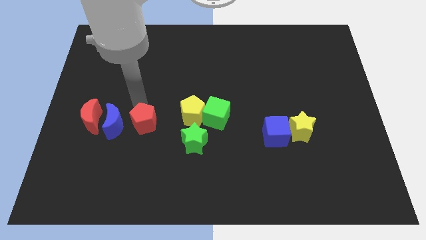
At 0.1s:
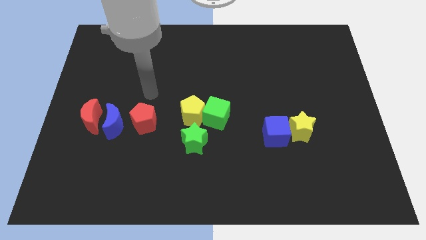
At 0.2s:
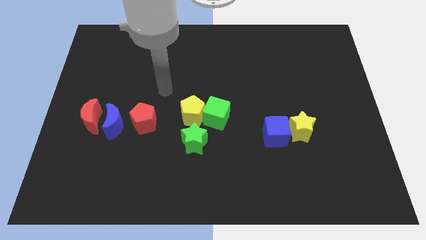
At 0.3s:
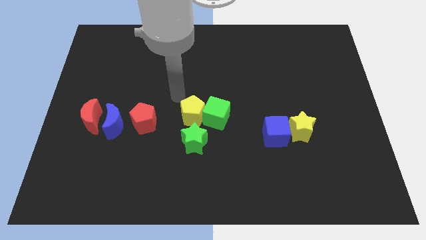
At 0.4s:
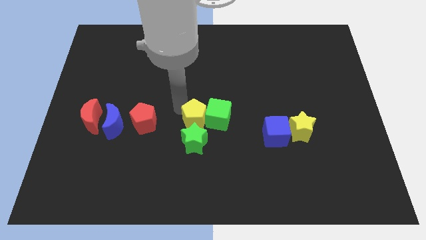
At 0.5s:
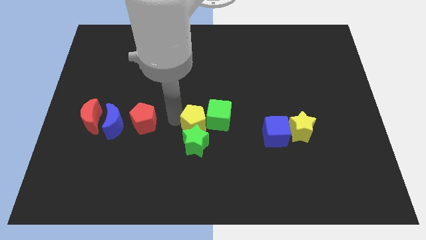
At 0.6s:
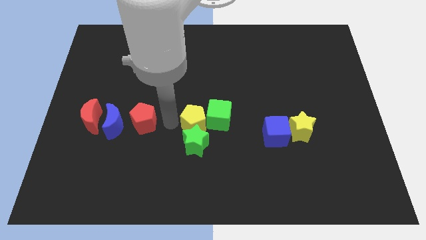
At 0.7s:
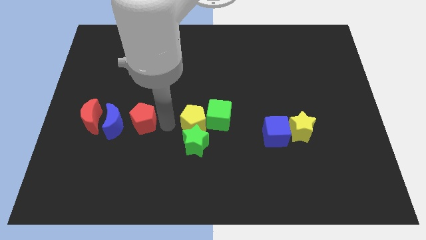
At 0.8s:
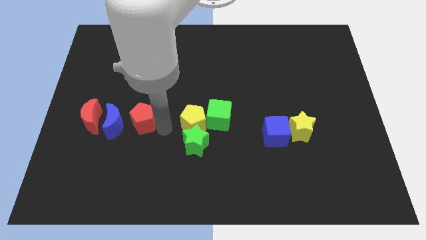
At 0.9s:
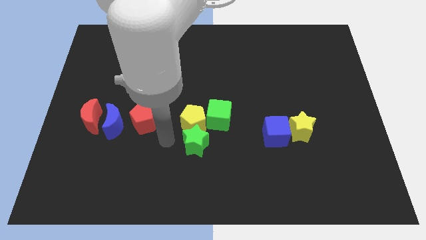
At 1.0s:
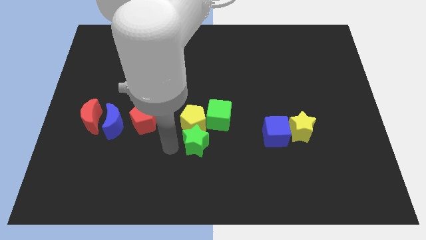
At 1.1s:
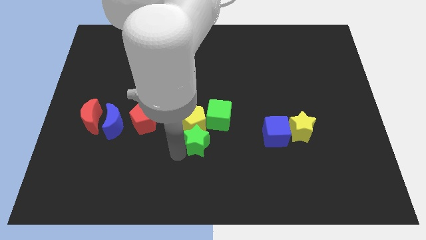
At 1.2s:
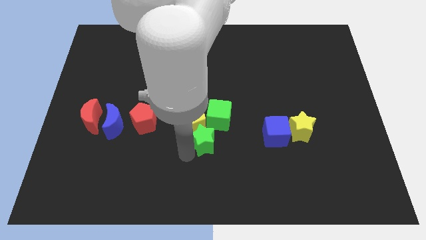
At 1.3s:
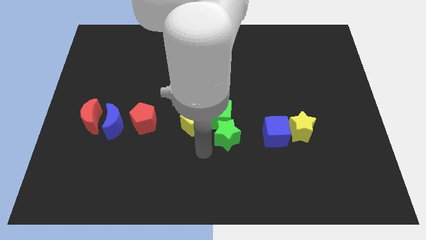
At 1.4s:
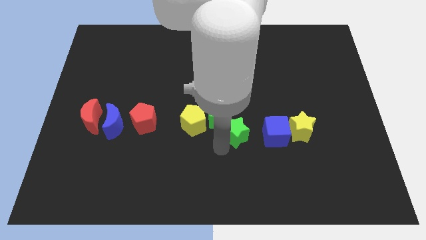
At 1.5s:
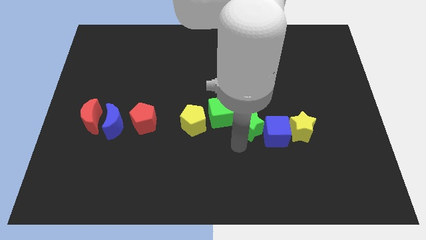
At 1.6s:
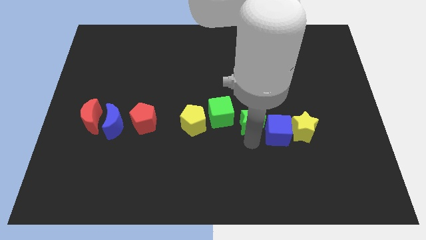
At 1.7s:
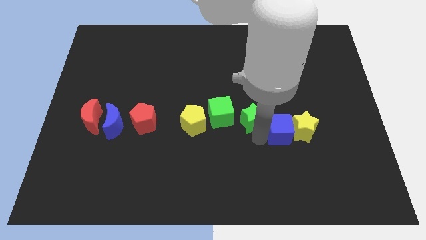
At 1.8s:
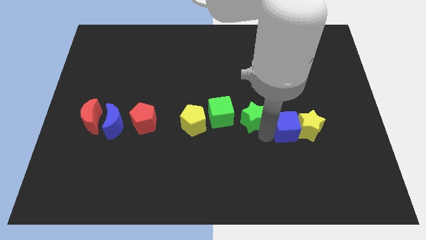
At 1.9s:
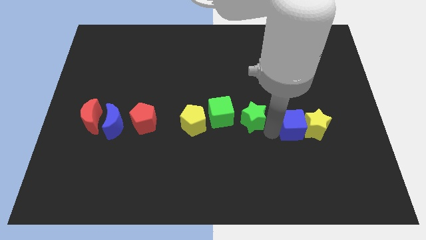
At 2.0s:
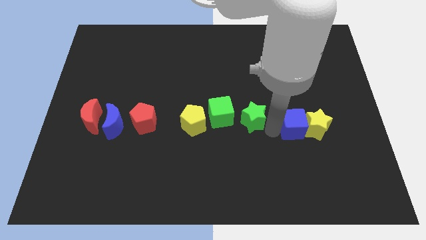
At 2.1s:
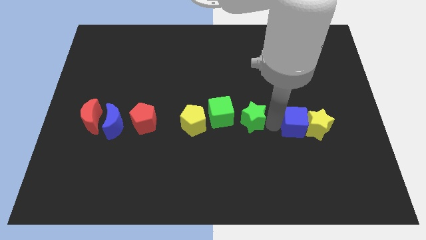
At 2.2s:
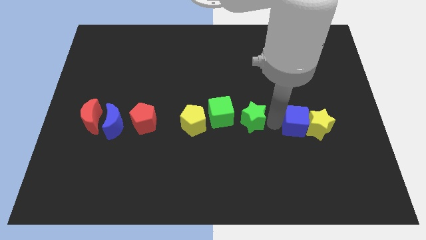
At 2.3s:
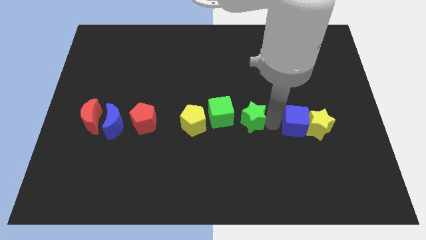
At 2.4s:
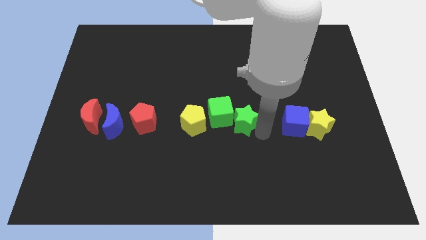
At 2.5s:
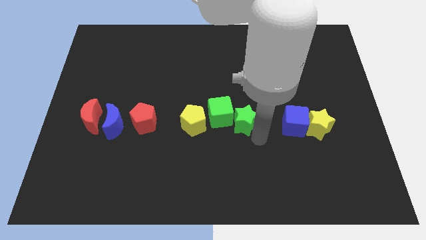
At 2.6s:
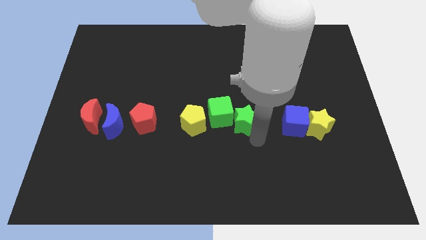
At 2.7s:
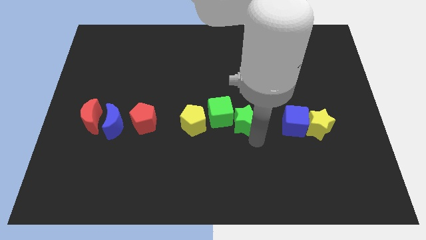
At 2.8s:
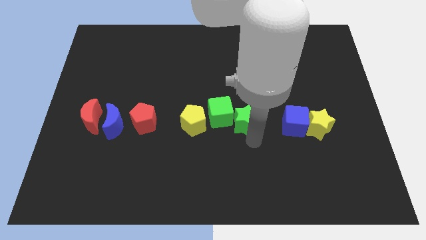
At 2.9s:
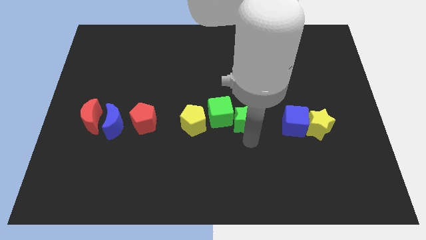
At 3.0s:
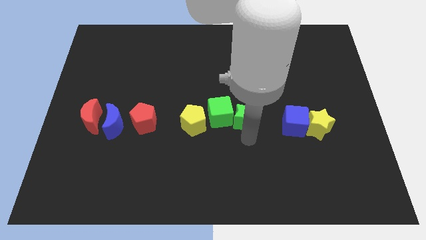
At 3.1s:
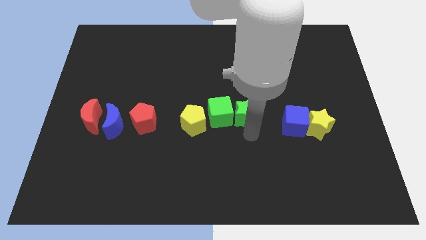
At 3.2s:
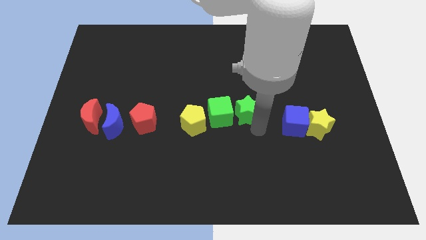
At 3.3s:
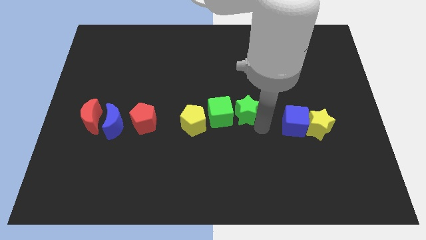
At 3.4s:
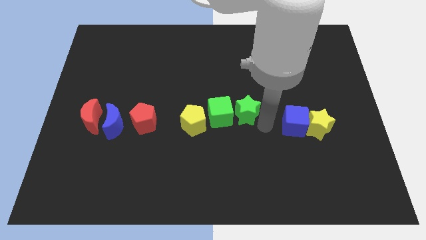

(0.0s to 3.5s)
slightly push the yellow pentagon towards the green star

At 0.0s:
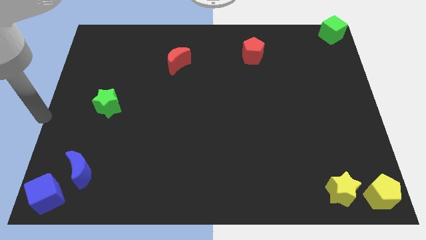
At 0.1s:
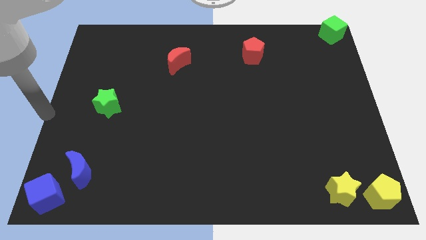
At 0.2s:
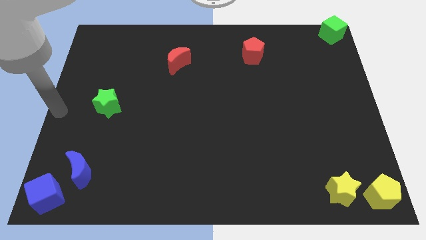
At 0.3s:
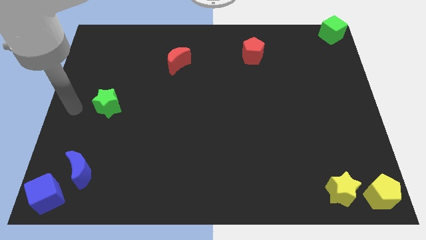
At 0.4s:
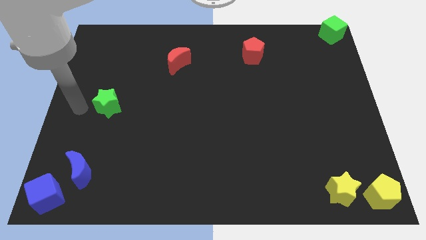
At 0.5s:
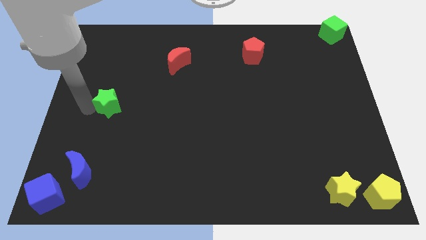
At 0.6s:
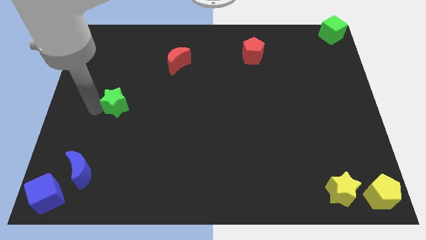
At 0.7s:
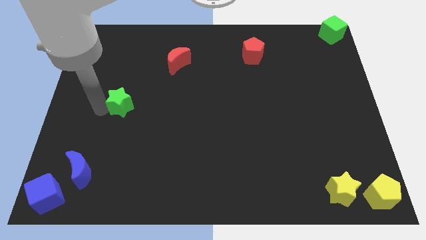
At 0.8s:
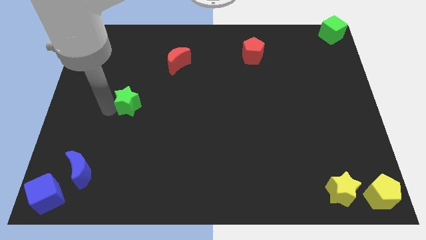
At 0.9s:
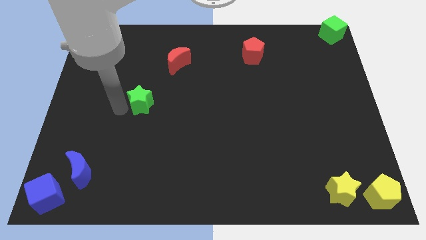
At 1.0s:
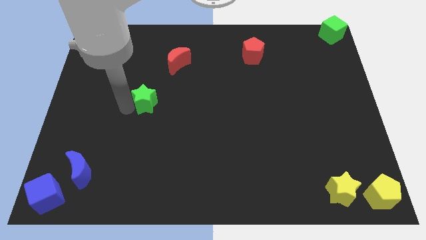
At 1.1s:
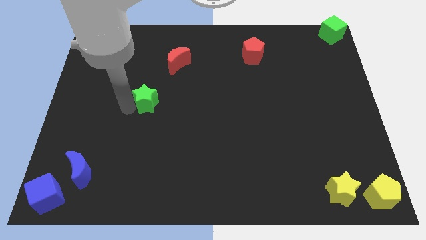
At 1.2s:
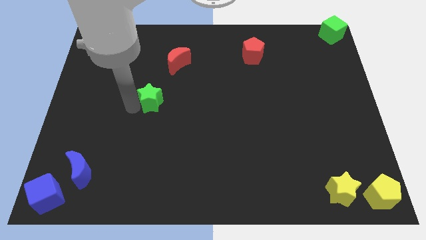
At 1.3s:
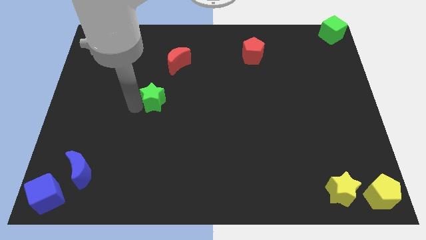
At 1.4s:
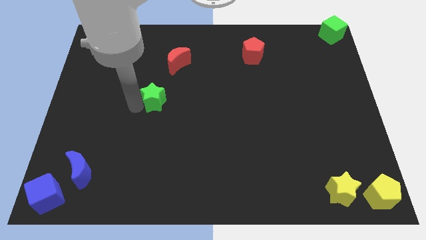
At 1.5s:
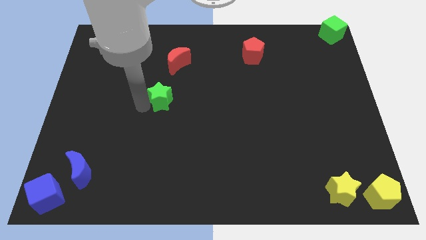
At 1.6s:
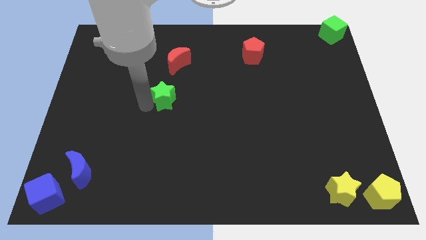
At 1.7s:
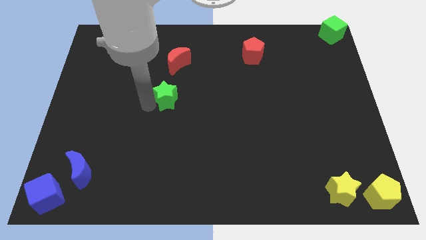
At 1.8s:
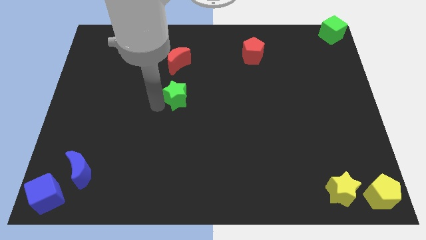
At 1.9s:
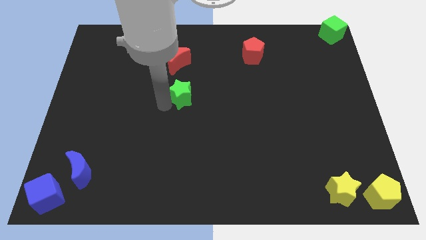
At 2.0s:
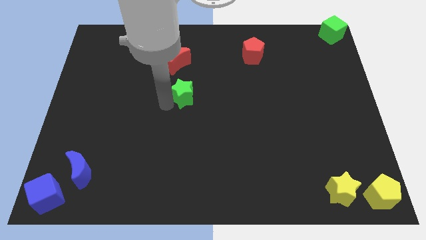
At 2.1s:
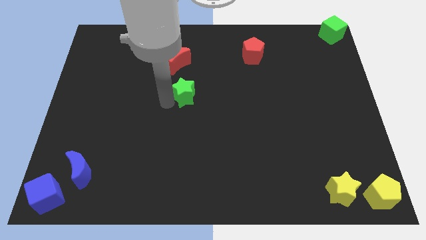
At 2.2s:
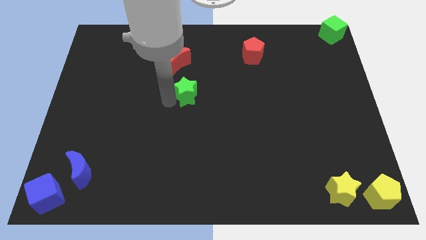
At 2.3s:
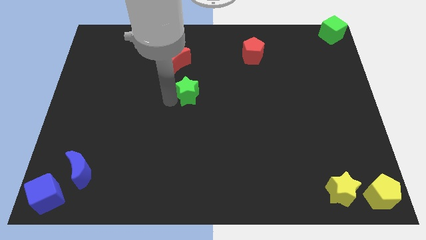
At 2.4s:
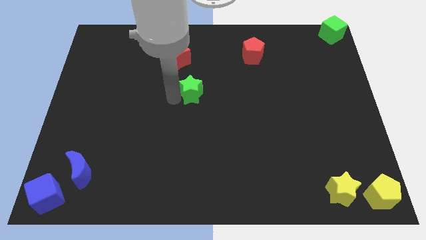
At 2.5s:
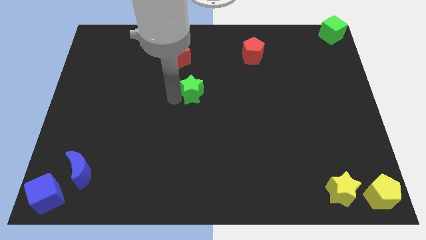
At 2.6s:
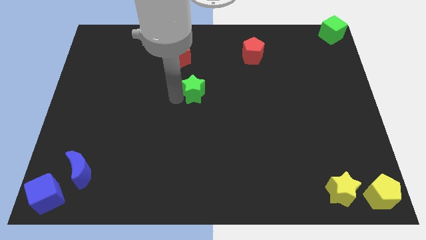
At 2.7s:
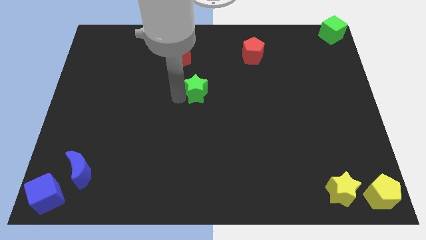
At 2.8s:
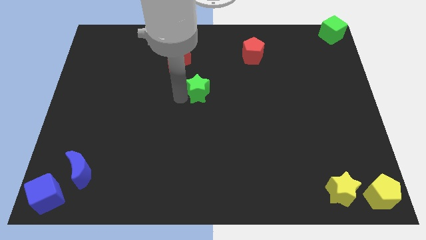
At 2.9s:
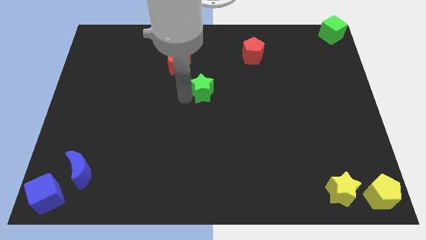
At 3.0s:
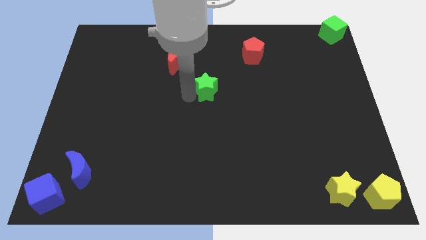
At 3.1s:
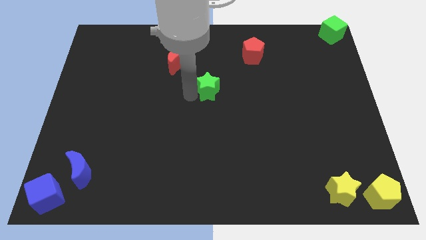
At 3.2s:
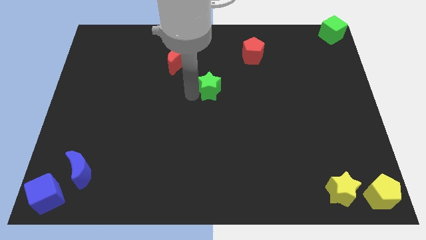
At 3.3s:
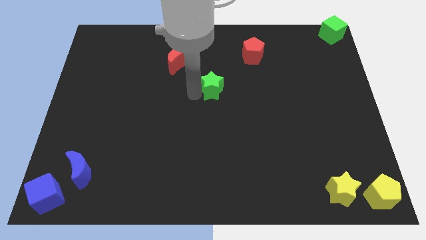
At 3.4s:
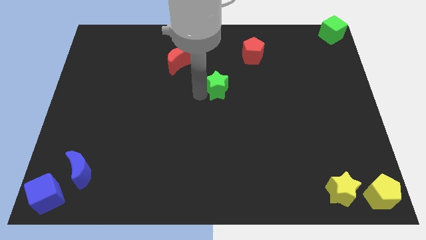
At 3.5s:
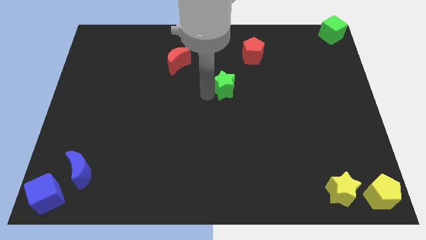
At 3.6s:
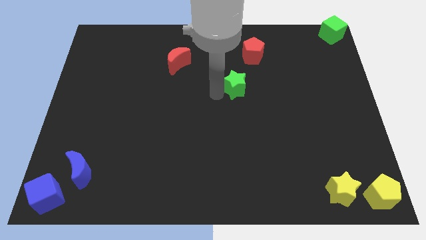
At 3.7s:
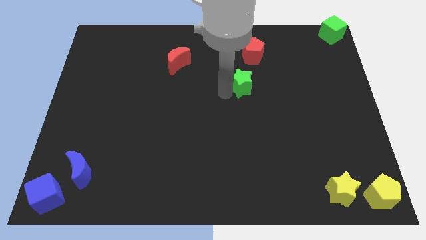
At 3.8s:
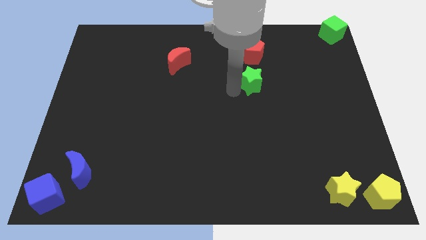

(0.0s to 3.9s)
move the green star vertically below the red pentagon

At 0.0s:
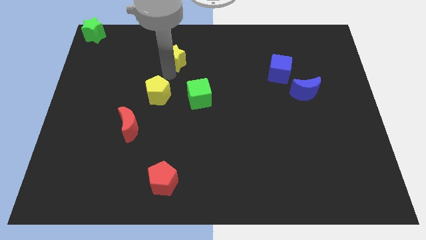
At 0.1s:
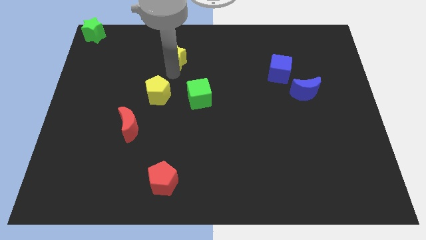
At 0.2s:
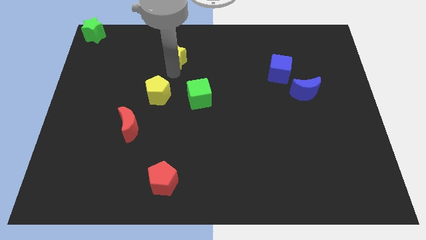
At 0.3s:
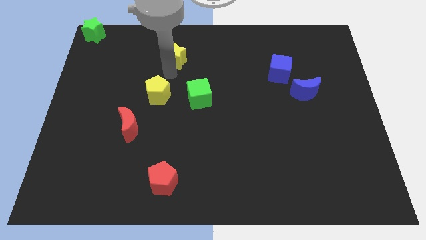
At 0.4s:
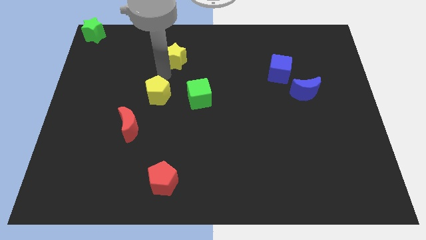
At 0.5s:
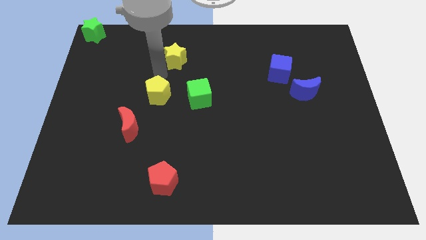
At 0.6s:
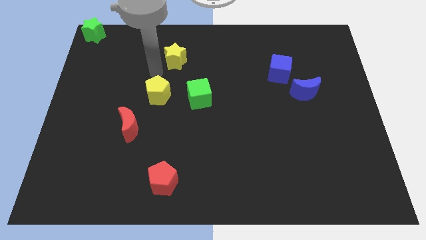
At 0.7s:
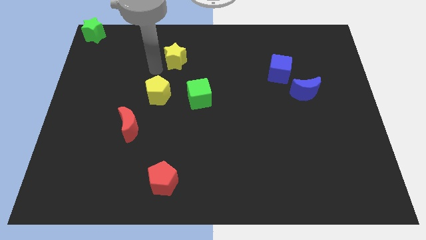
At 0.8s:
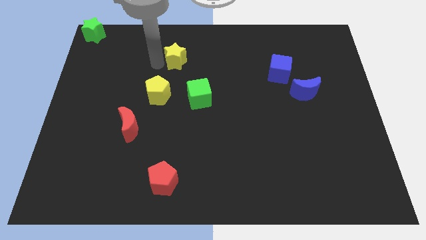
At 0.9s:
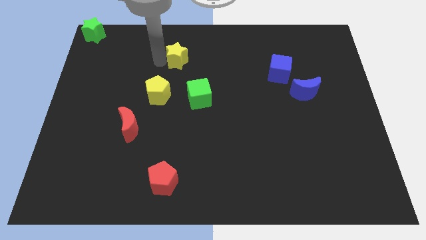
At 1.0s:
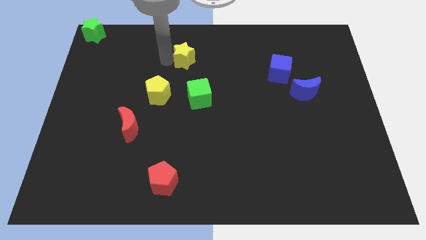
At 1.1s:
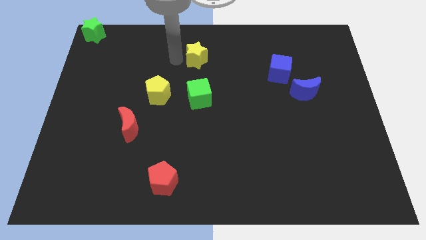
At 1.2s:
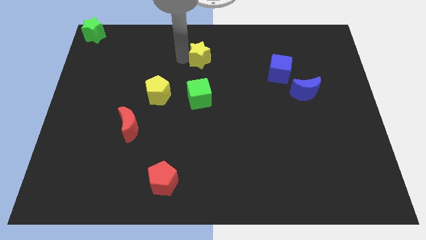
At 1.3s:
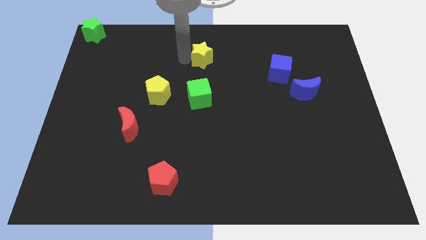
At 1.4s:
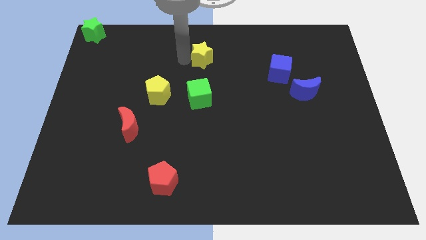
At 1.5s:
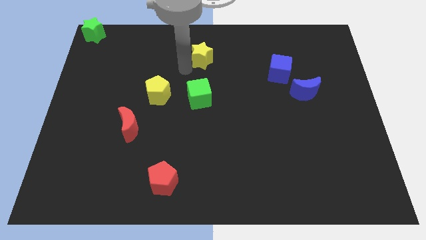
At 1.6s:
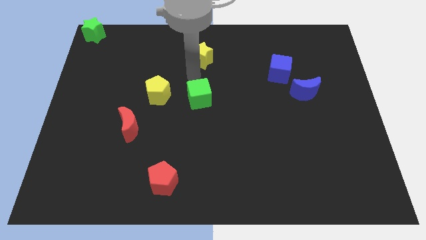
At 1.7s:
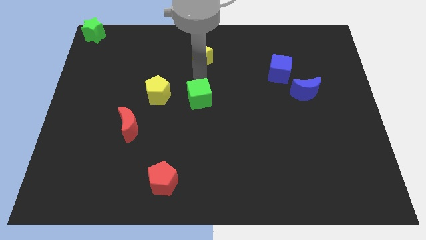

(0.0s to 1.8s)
push the yellow star above the green cube
